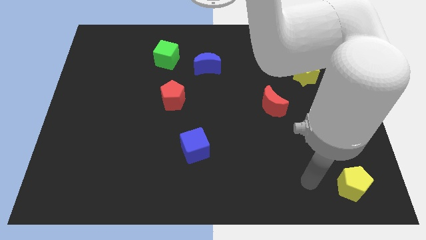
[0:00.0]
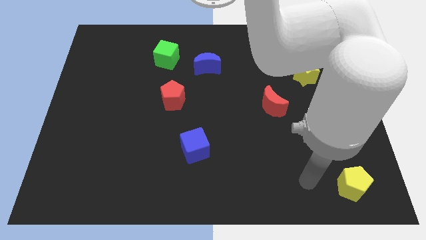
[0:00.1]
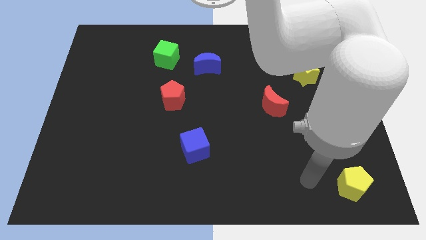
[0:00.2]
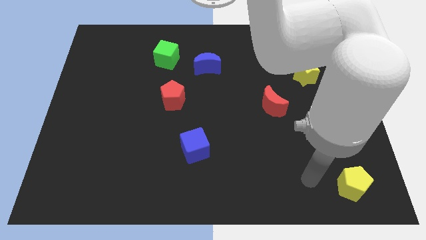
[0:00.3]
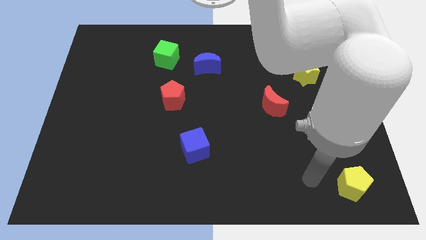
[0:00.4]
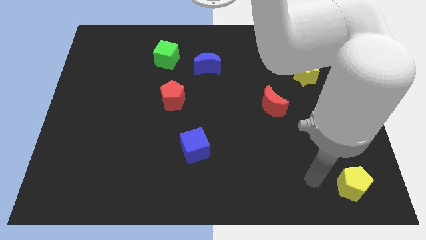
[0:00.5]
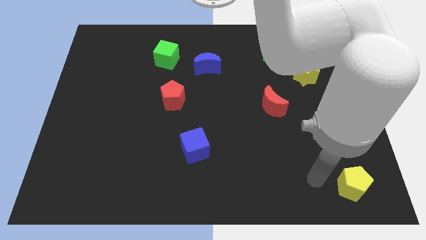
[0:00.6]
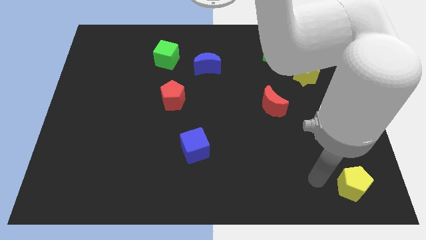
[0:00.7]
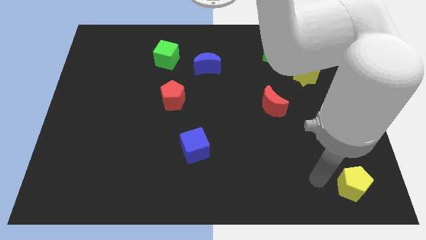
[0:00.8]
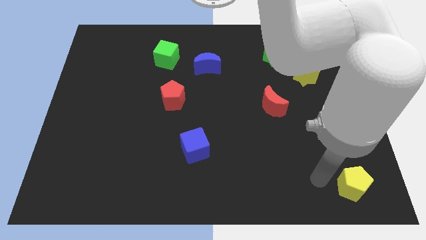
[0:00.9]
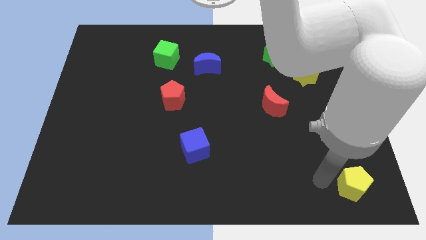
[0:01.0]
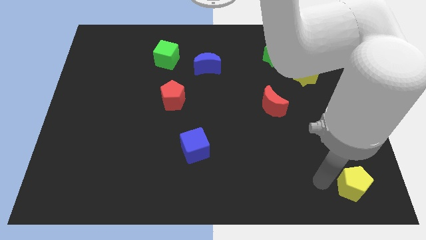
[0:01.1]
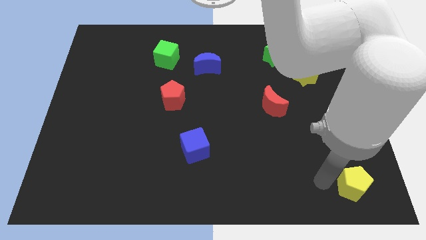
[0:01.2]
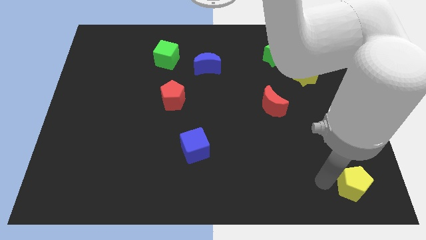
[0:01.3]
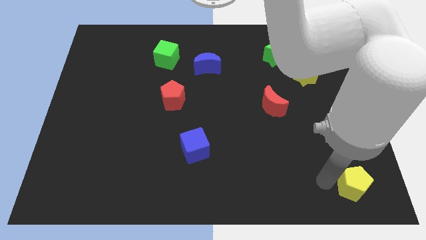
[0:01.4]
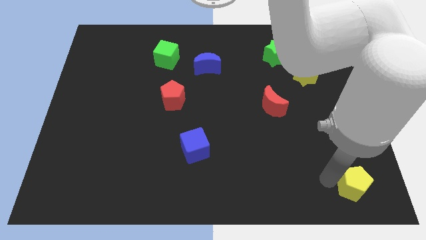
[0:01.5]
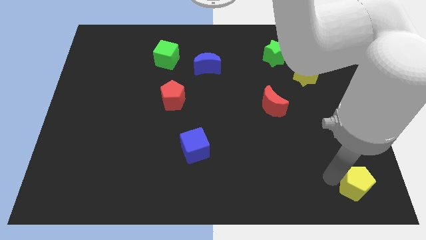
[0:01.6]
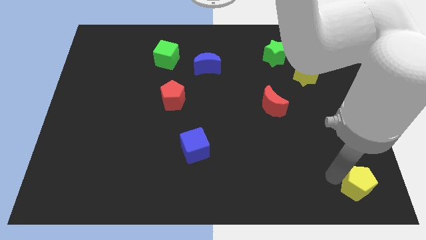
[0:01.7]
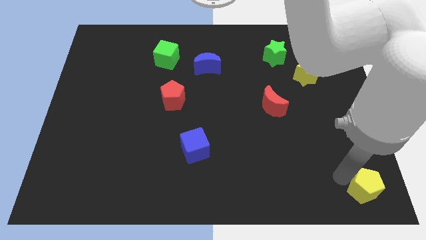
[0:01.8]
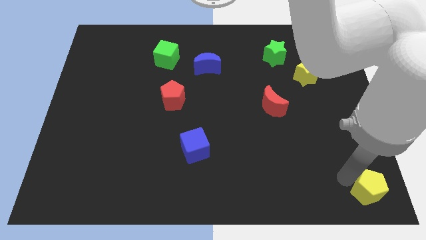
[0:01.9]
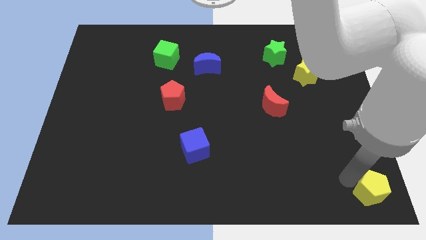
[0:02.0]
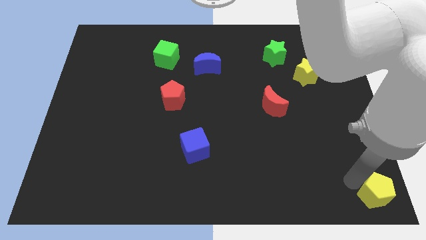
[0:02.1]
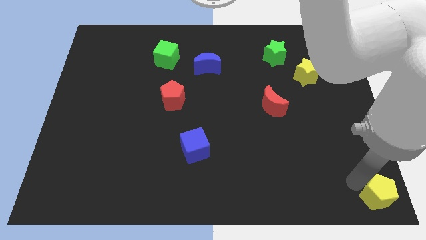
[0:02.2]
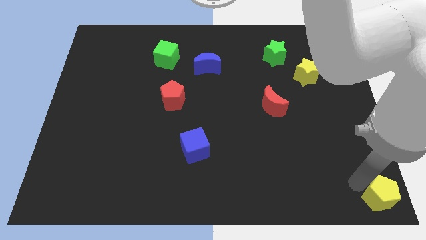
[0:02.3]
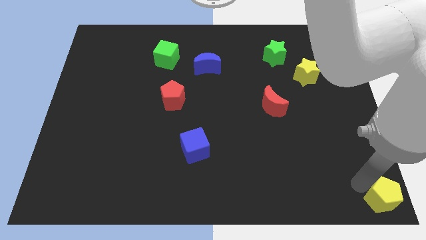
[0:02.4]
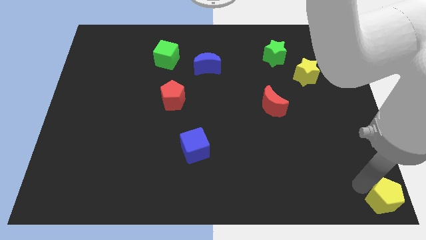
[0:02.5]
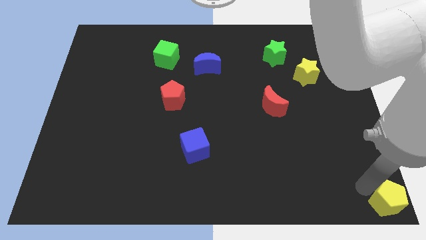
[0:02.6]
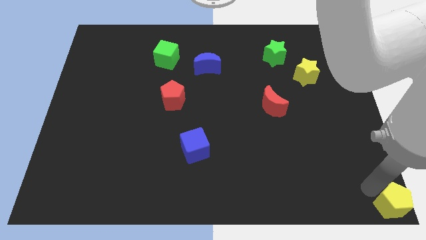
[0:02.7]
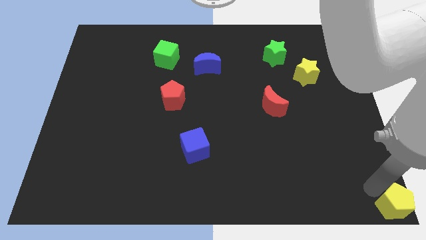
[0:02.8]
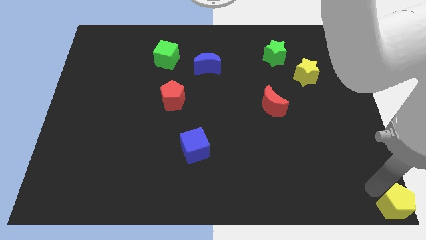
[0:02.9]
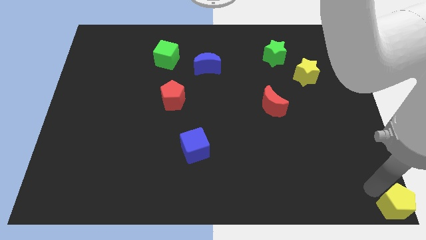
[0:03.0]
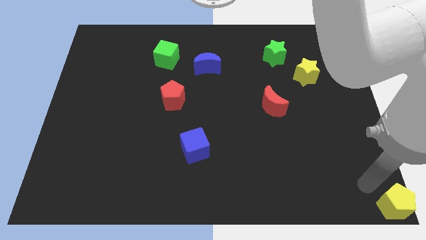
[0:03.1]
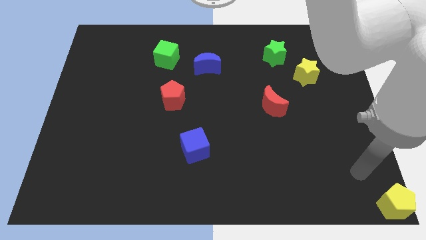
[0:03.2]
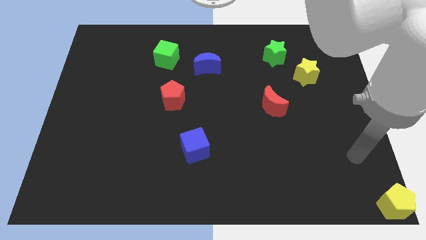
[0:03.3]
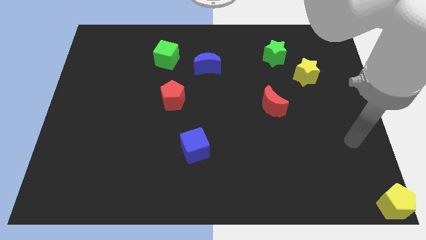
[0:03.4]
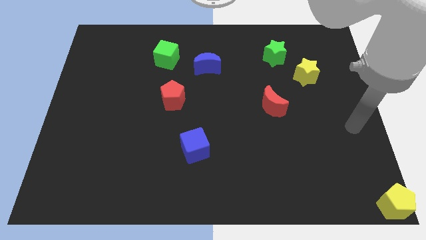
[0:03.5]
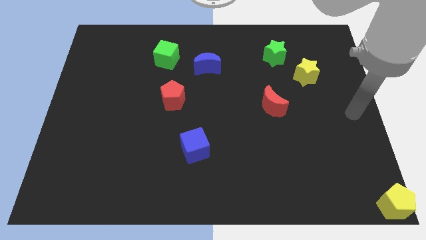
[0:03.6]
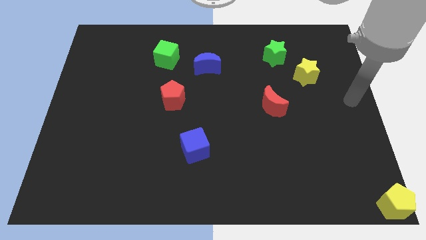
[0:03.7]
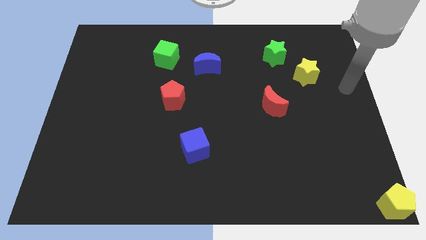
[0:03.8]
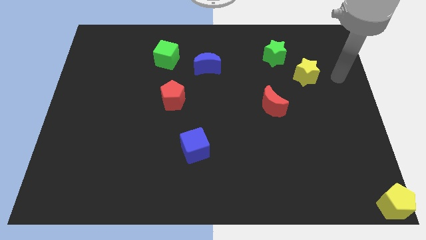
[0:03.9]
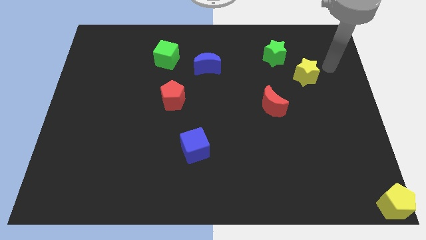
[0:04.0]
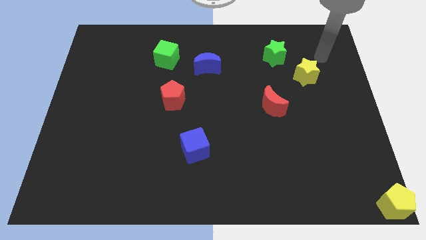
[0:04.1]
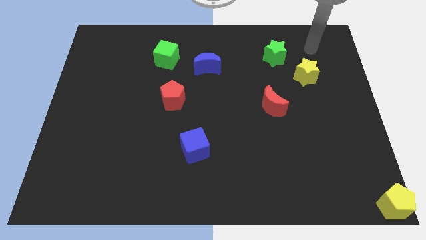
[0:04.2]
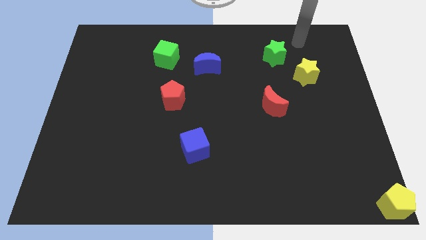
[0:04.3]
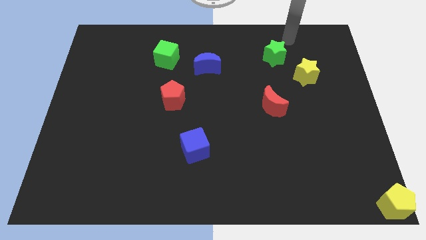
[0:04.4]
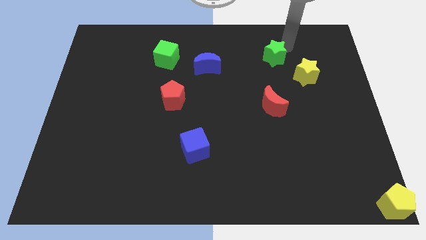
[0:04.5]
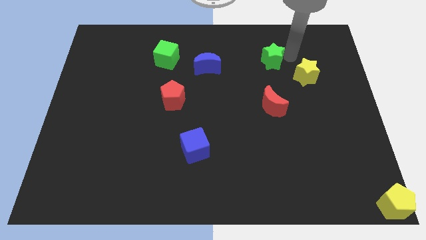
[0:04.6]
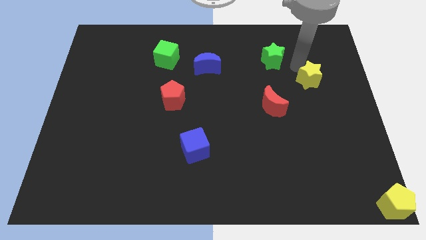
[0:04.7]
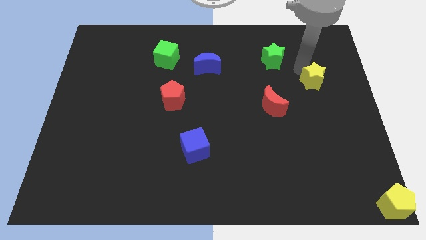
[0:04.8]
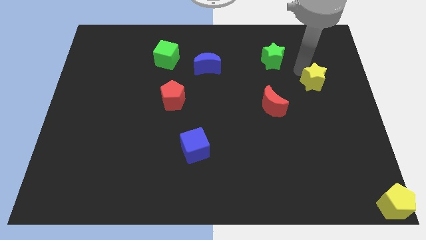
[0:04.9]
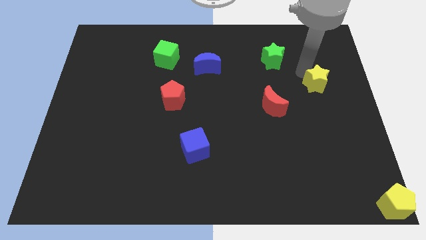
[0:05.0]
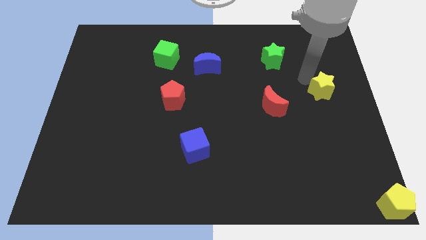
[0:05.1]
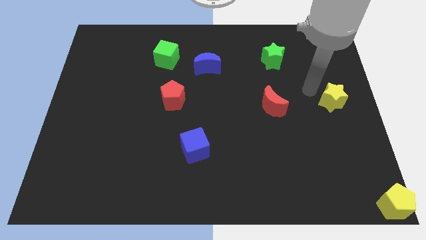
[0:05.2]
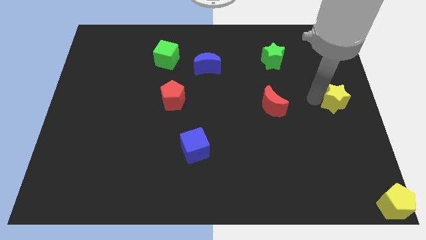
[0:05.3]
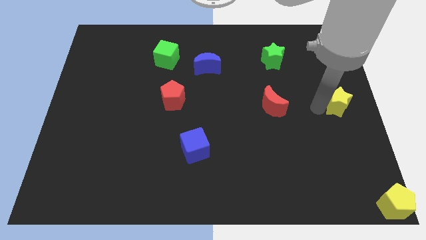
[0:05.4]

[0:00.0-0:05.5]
push yellow star towards bottom

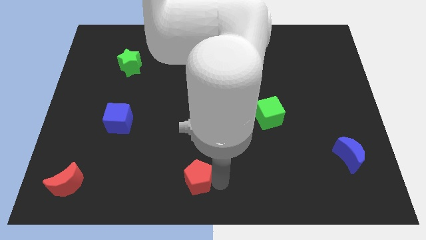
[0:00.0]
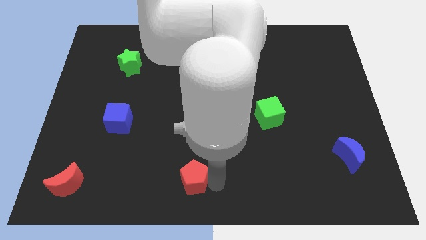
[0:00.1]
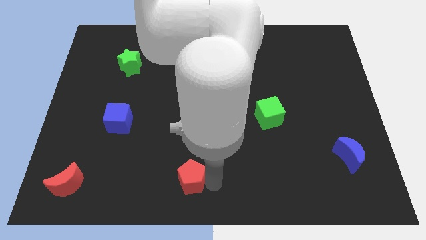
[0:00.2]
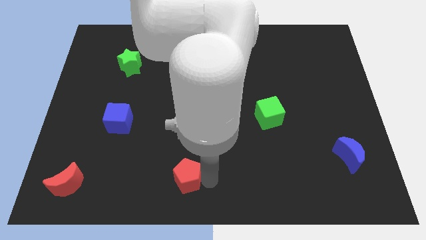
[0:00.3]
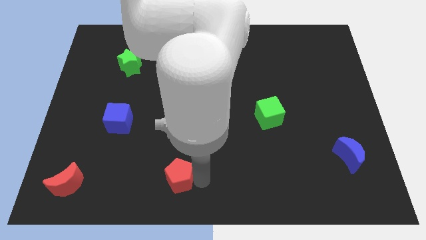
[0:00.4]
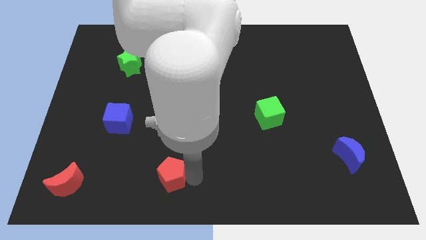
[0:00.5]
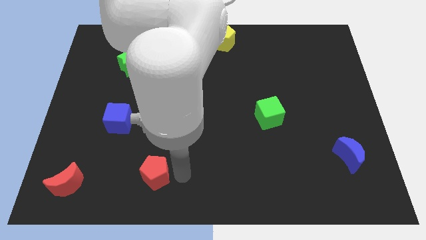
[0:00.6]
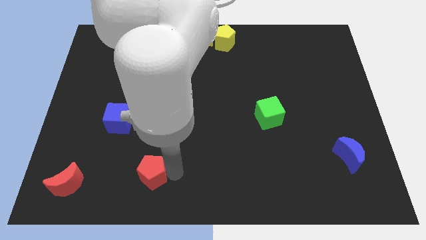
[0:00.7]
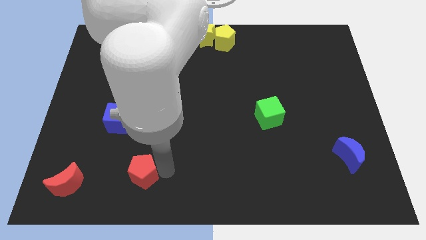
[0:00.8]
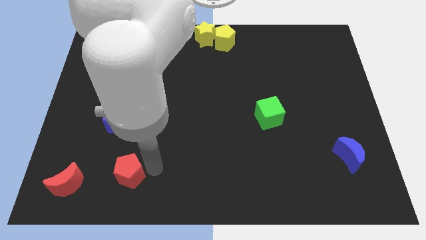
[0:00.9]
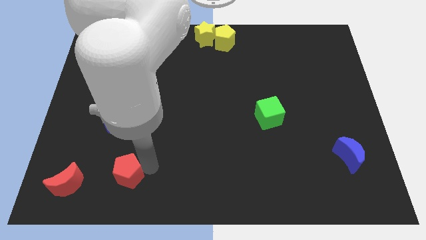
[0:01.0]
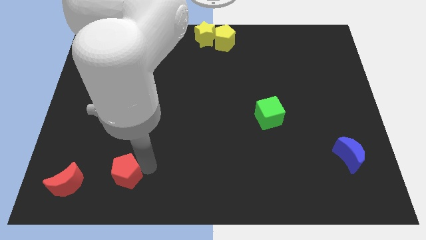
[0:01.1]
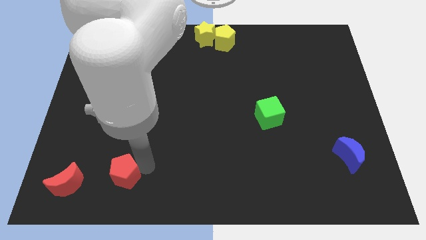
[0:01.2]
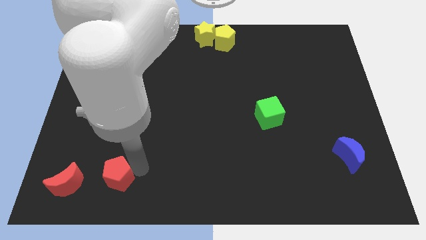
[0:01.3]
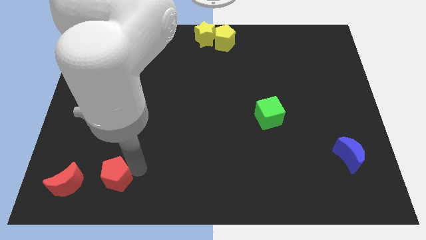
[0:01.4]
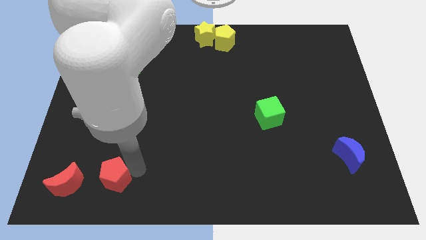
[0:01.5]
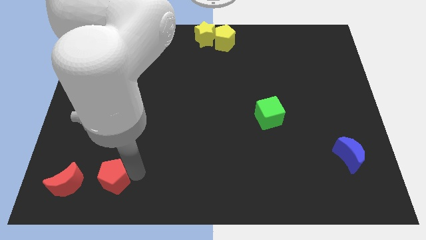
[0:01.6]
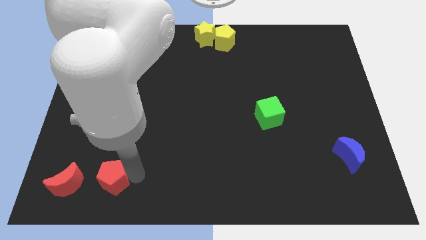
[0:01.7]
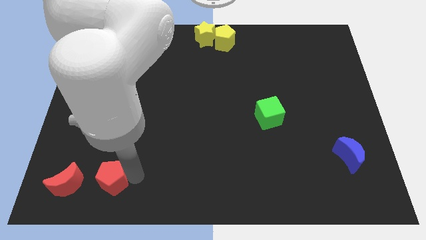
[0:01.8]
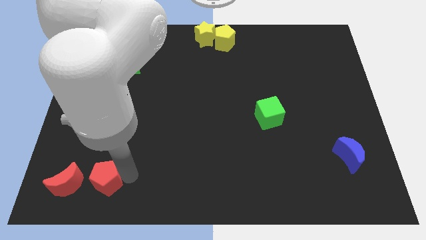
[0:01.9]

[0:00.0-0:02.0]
push red pentagon below blue cube

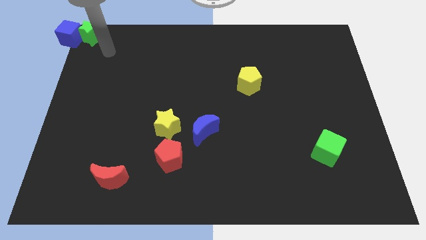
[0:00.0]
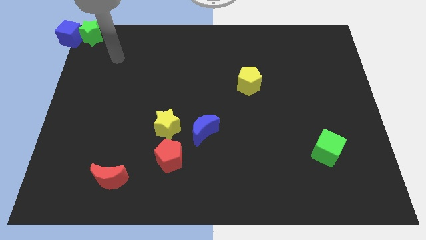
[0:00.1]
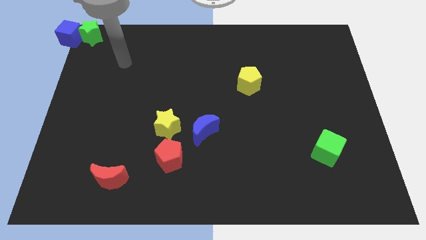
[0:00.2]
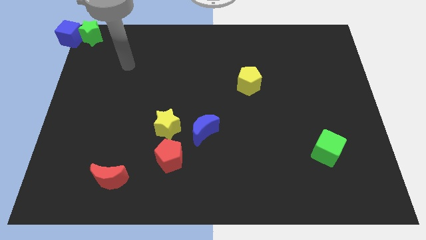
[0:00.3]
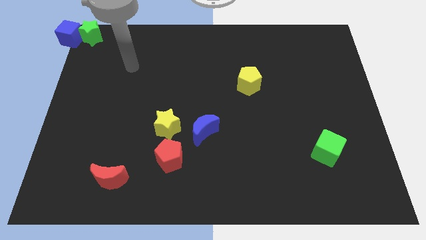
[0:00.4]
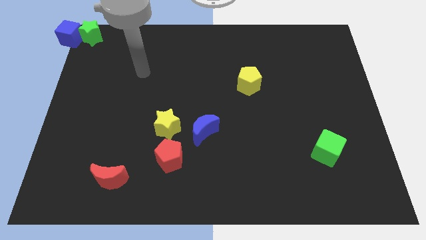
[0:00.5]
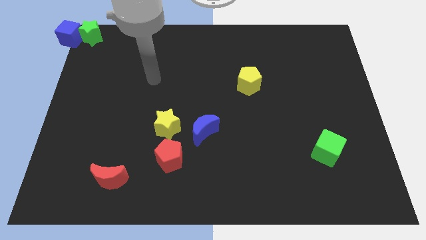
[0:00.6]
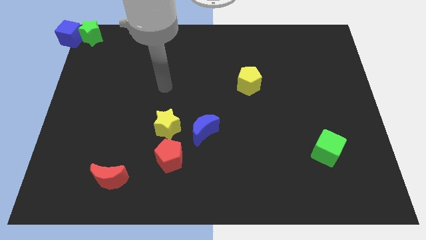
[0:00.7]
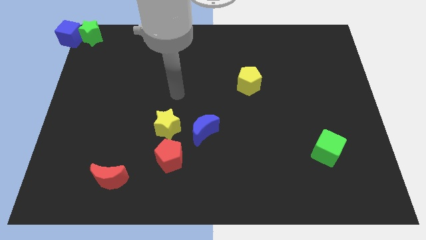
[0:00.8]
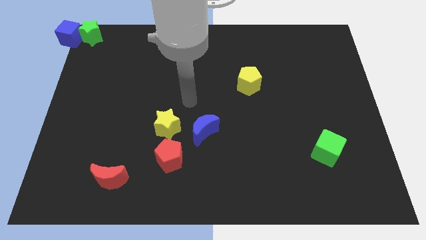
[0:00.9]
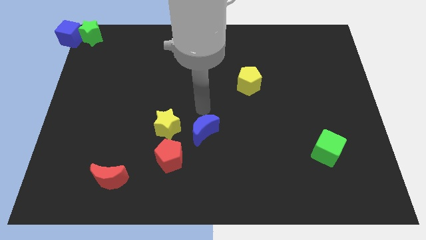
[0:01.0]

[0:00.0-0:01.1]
point your arm at the top of the blue crescent

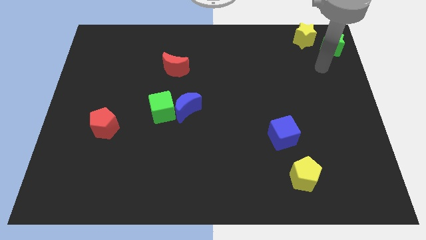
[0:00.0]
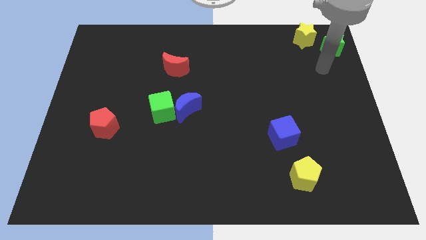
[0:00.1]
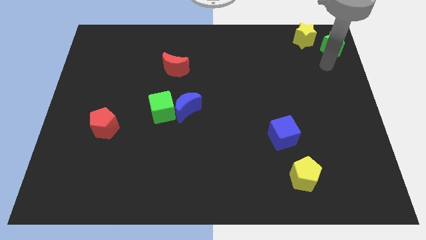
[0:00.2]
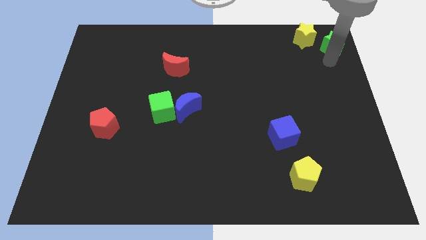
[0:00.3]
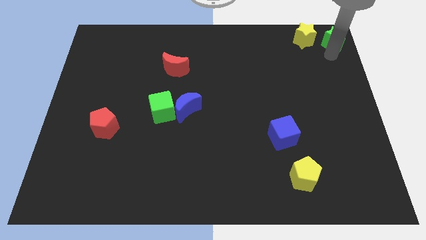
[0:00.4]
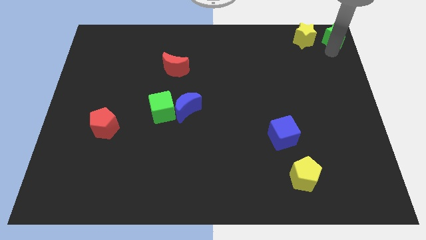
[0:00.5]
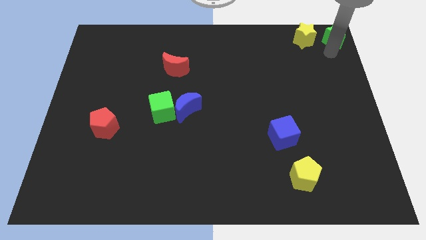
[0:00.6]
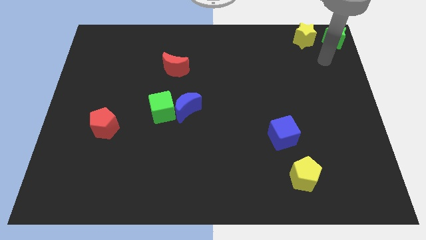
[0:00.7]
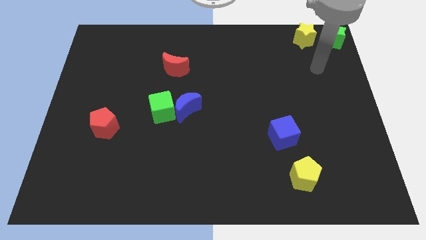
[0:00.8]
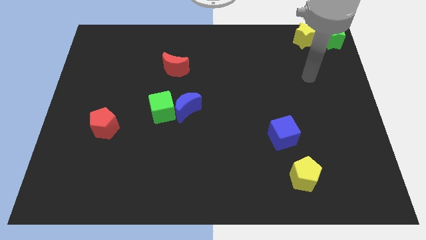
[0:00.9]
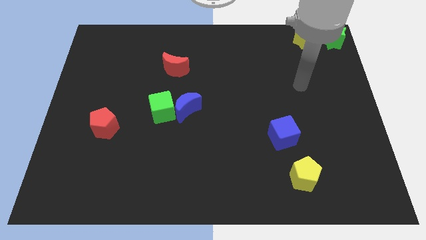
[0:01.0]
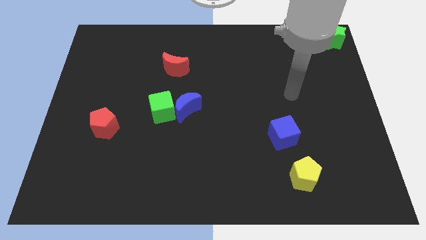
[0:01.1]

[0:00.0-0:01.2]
move green star to the top right corner of the board
